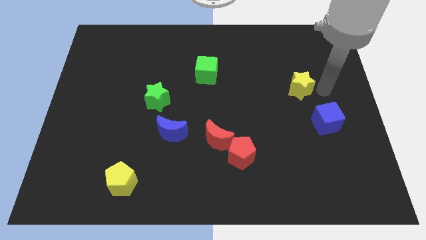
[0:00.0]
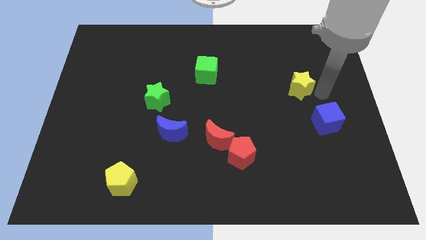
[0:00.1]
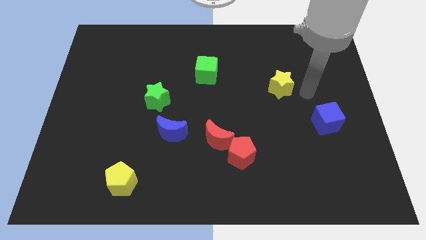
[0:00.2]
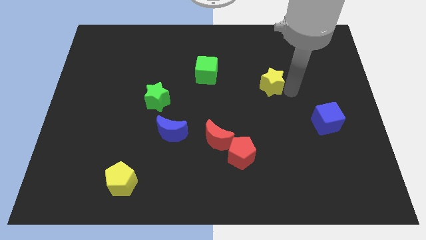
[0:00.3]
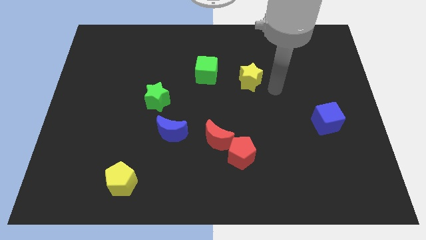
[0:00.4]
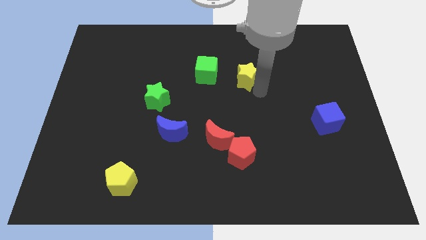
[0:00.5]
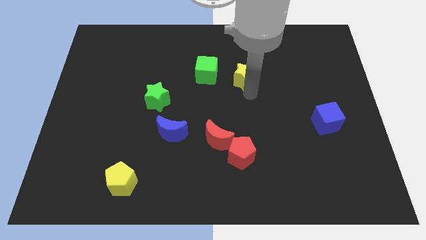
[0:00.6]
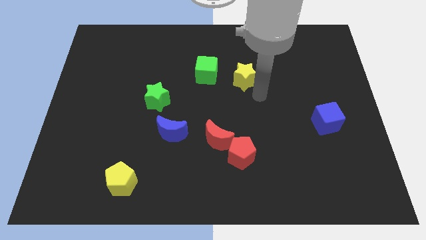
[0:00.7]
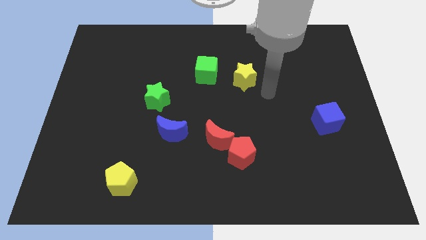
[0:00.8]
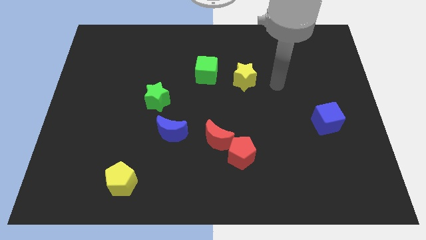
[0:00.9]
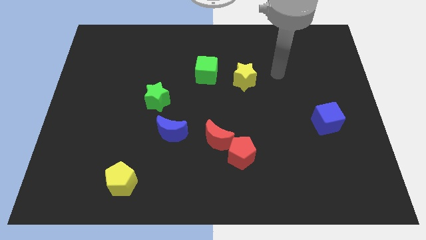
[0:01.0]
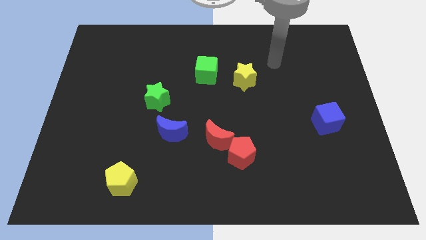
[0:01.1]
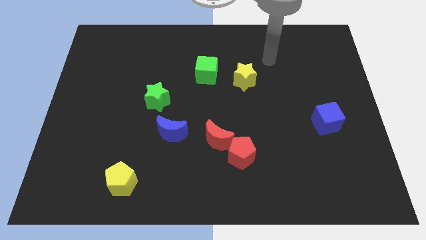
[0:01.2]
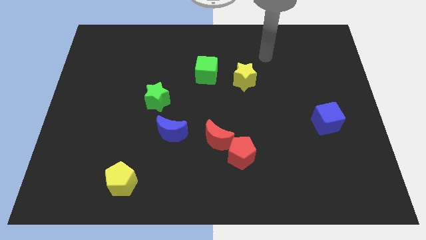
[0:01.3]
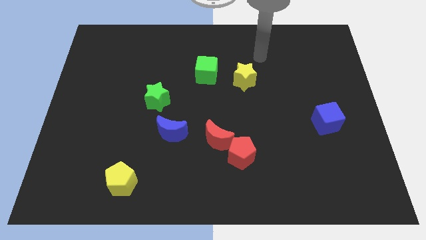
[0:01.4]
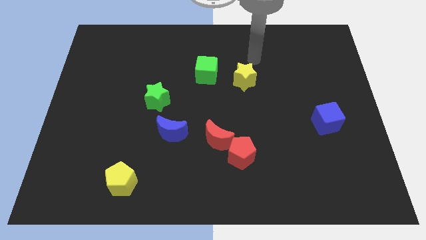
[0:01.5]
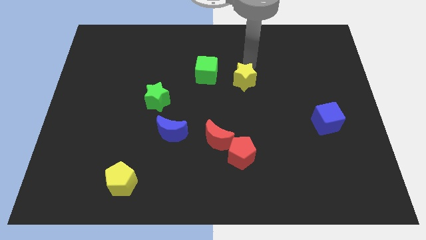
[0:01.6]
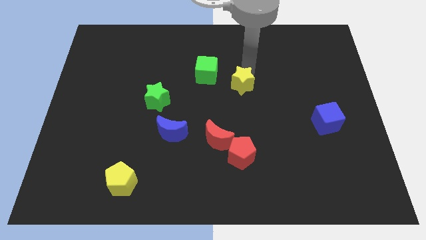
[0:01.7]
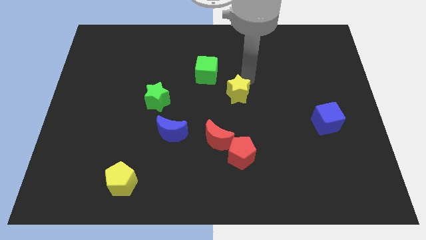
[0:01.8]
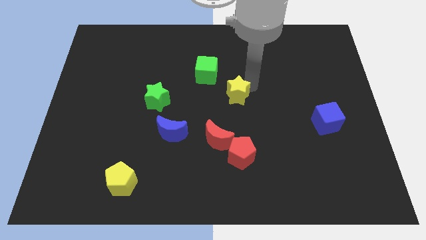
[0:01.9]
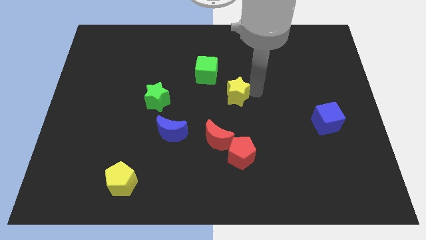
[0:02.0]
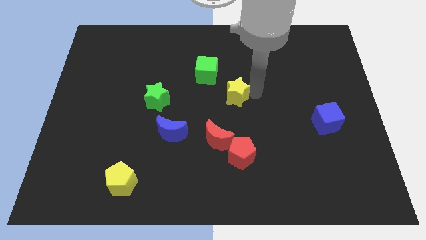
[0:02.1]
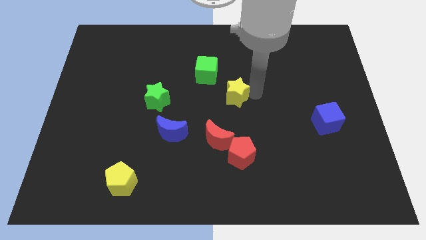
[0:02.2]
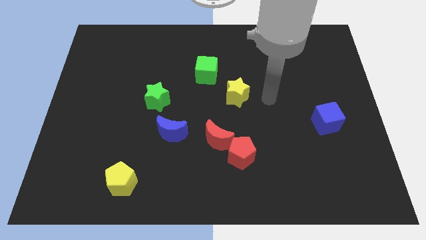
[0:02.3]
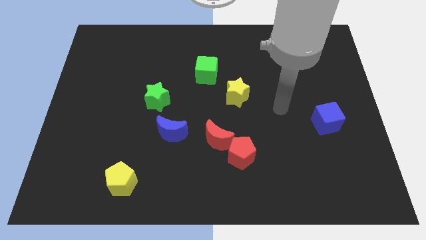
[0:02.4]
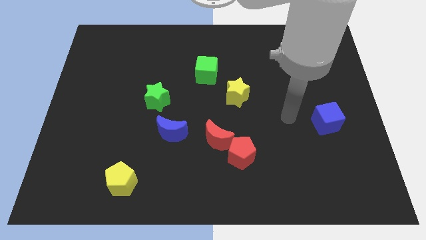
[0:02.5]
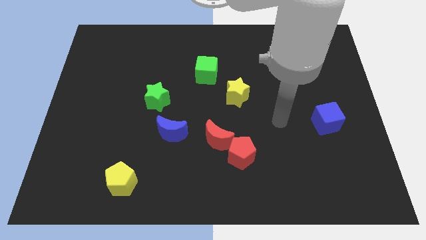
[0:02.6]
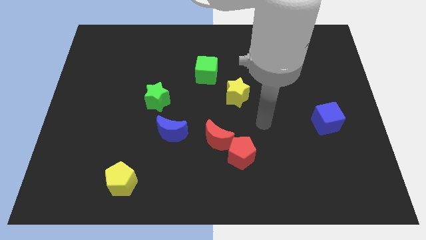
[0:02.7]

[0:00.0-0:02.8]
put the yellow star parallel to green star

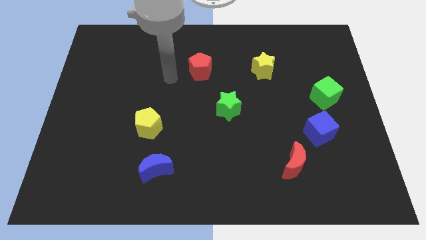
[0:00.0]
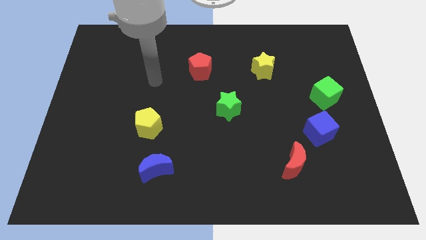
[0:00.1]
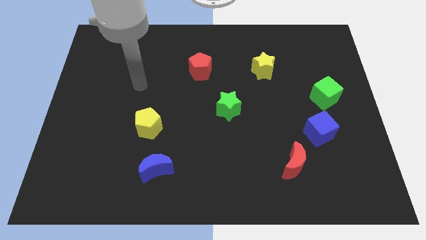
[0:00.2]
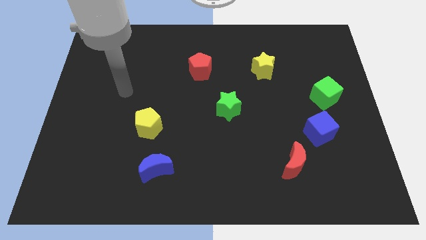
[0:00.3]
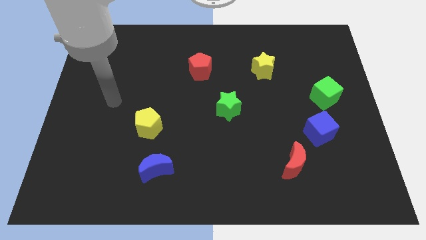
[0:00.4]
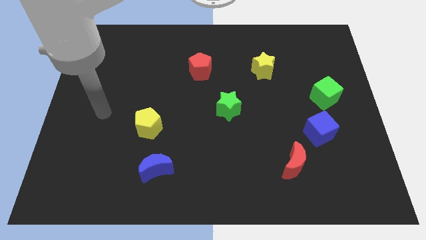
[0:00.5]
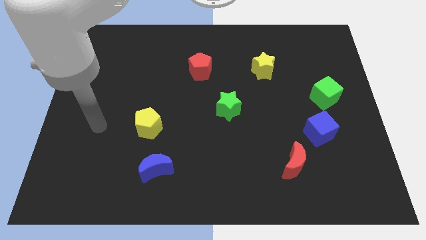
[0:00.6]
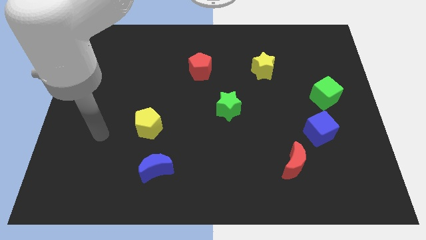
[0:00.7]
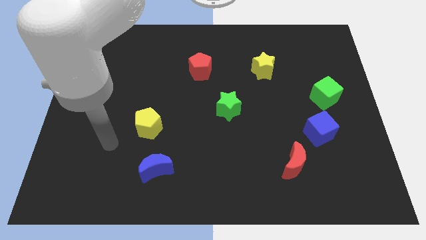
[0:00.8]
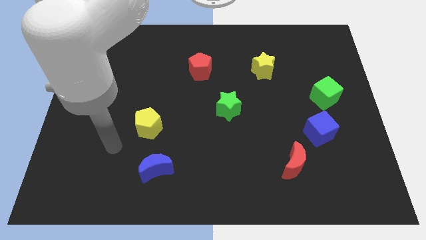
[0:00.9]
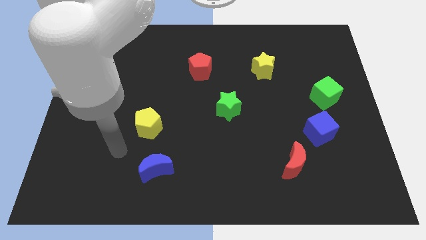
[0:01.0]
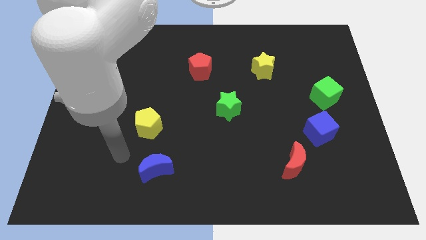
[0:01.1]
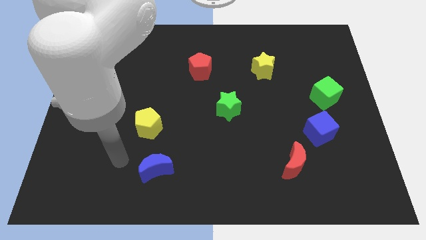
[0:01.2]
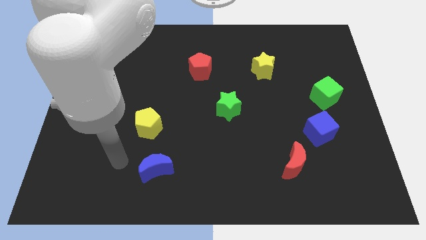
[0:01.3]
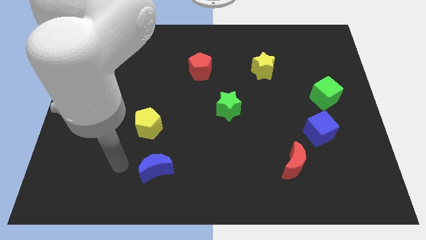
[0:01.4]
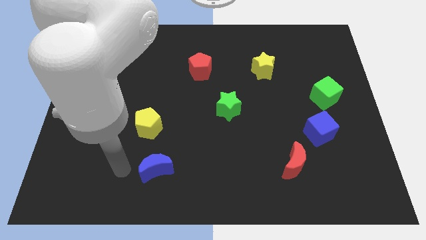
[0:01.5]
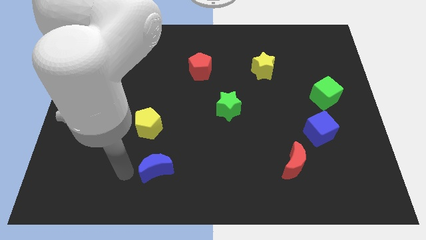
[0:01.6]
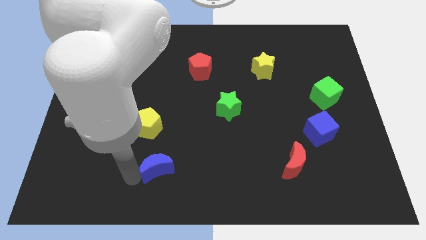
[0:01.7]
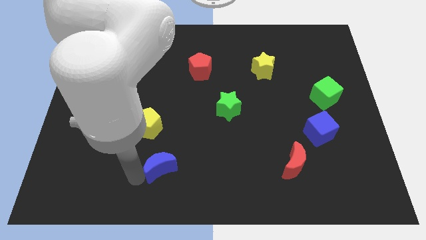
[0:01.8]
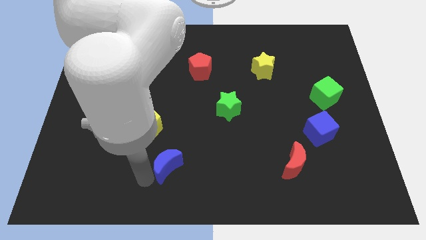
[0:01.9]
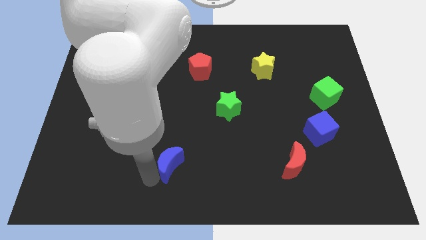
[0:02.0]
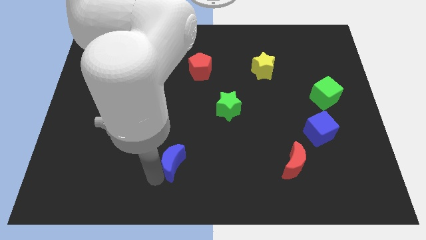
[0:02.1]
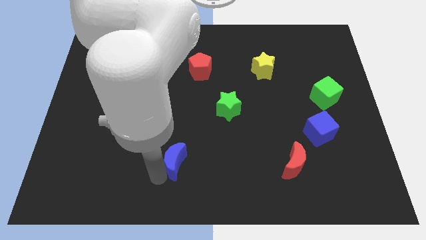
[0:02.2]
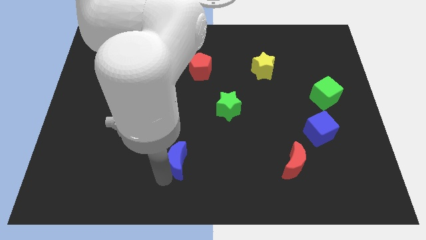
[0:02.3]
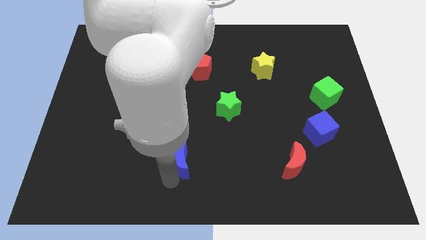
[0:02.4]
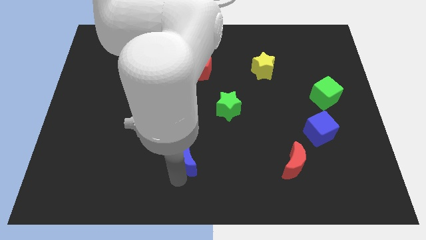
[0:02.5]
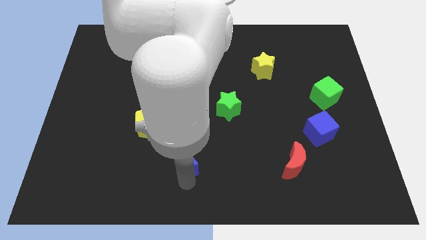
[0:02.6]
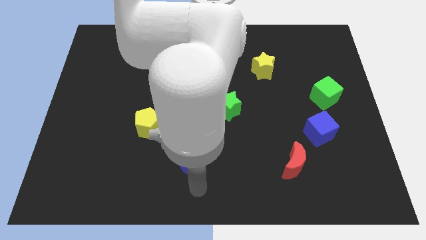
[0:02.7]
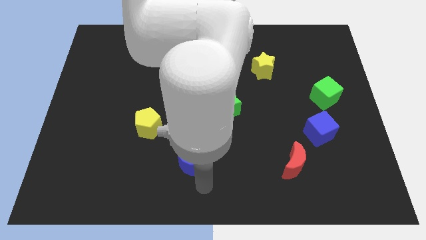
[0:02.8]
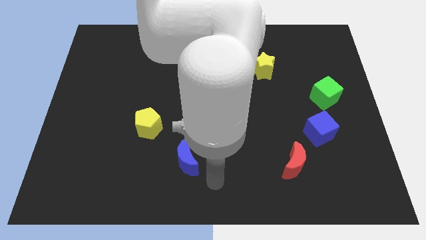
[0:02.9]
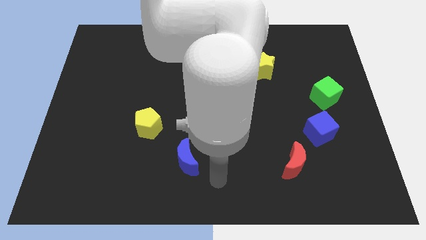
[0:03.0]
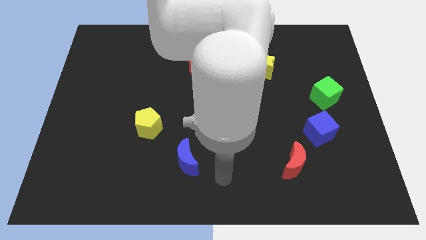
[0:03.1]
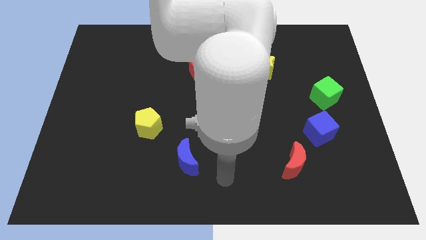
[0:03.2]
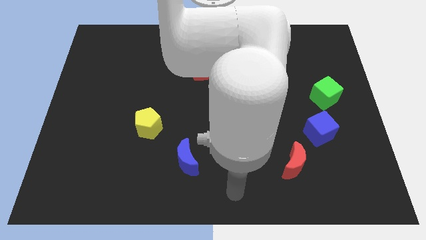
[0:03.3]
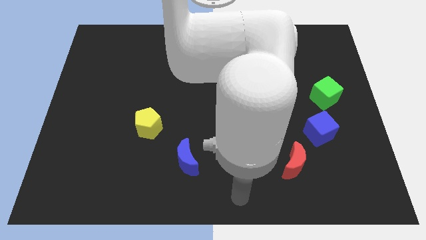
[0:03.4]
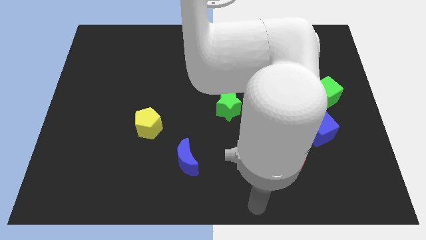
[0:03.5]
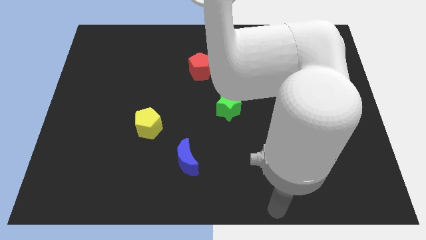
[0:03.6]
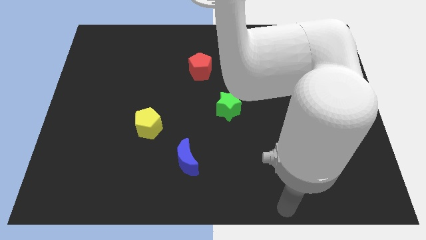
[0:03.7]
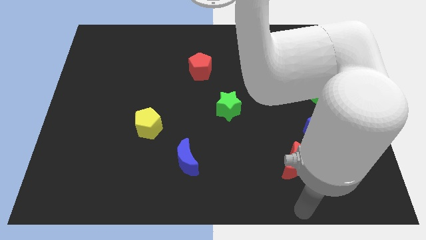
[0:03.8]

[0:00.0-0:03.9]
push the blue crescent towards right a bit

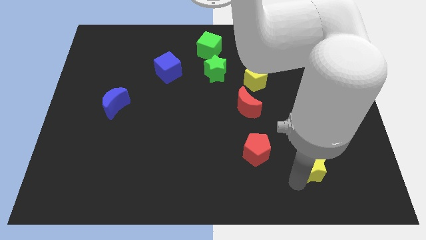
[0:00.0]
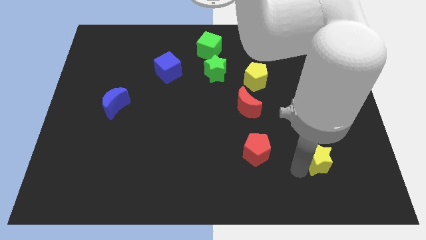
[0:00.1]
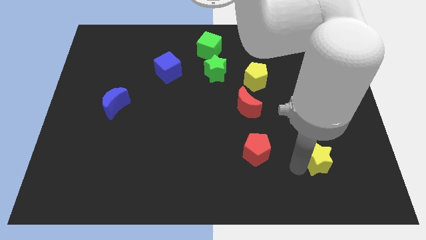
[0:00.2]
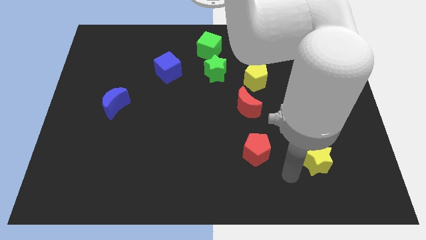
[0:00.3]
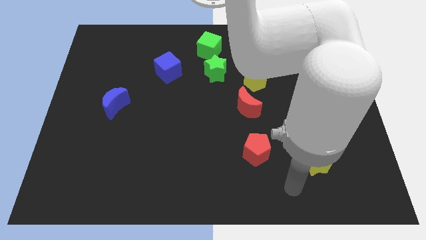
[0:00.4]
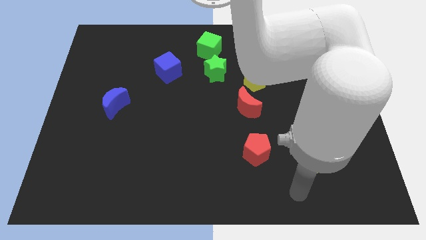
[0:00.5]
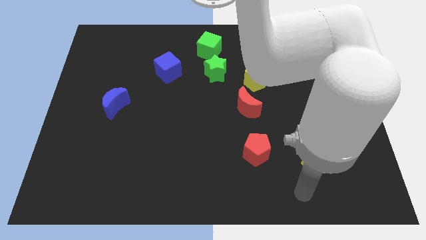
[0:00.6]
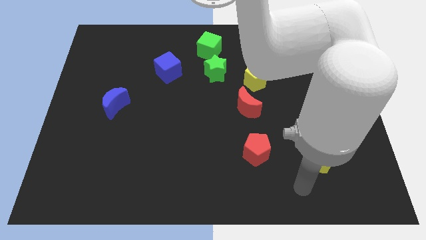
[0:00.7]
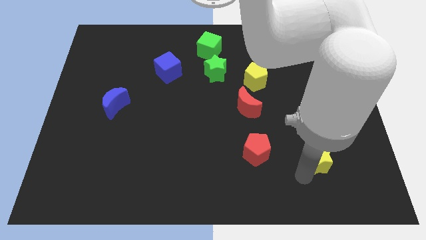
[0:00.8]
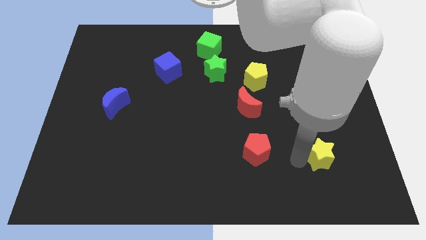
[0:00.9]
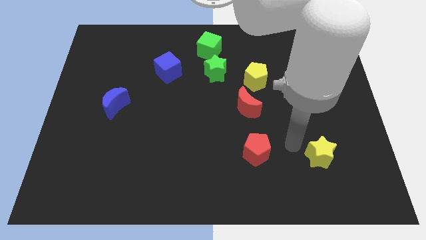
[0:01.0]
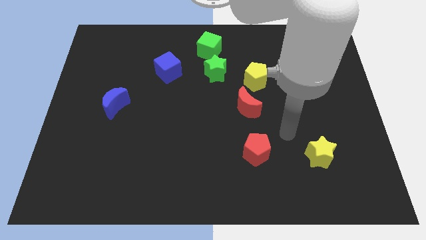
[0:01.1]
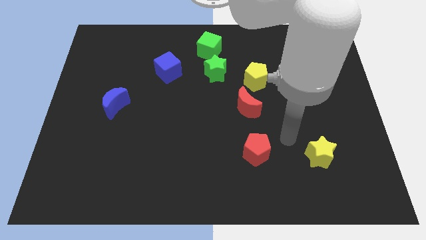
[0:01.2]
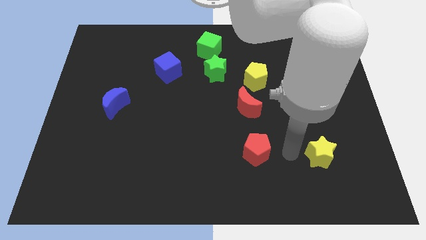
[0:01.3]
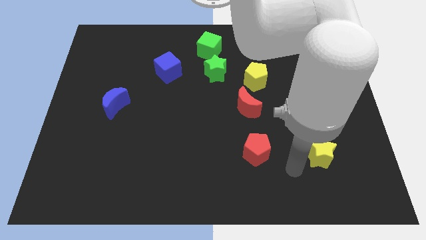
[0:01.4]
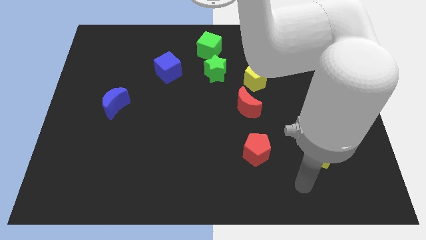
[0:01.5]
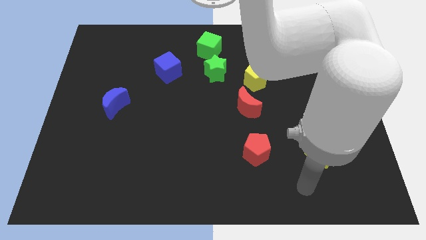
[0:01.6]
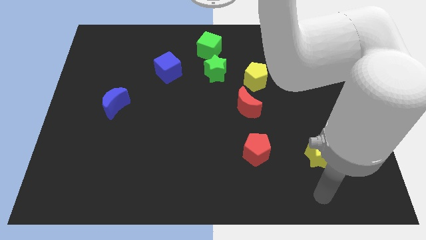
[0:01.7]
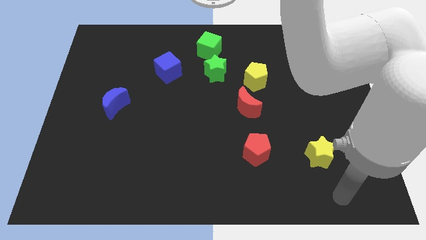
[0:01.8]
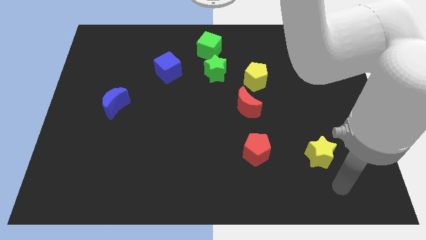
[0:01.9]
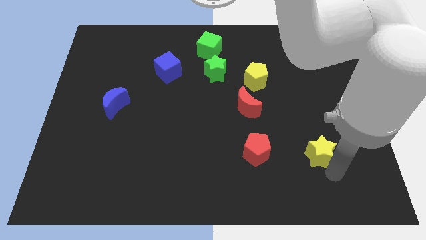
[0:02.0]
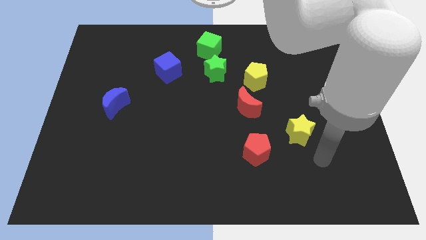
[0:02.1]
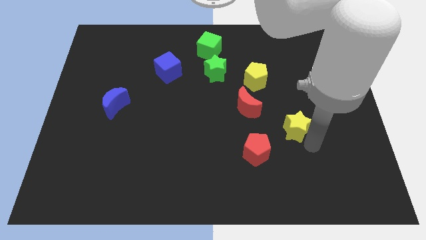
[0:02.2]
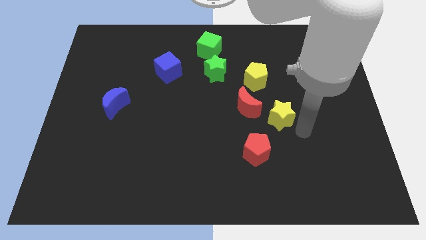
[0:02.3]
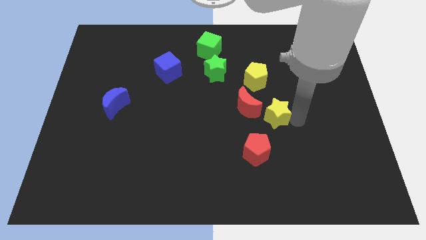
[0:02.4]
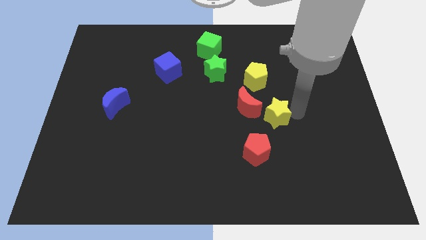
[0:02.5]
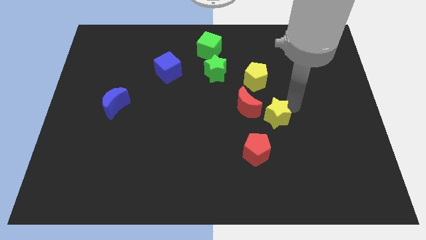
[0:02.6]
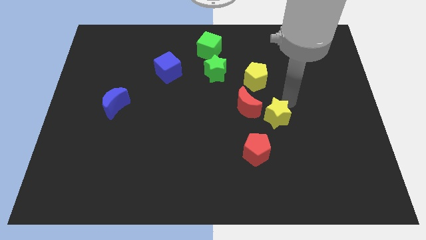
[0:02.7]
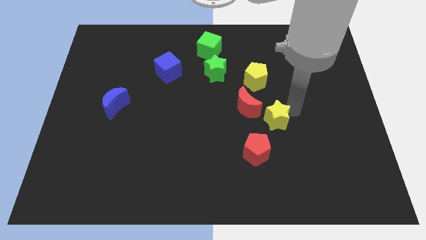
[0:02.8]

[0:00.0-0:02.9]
push the yellow star near the red moon
